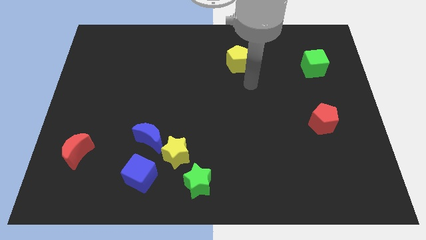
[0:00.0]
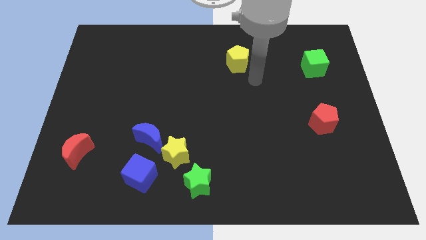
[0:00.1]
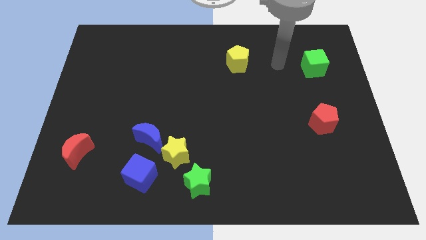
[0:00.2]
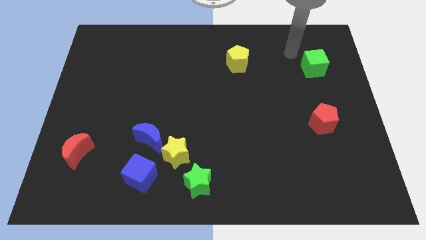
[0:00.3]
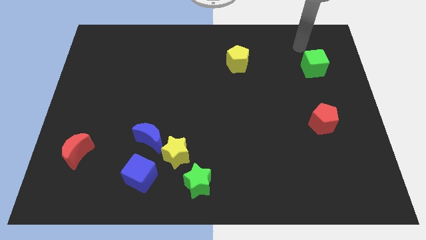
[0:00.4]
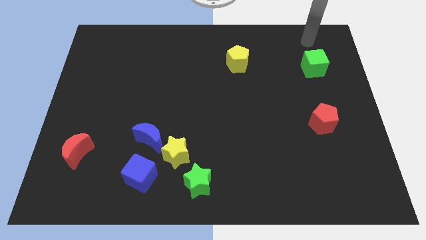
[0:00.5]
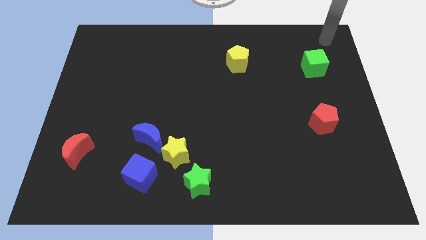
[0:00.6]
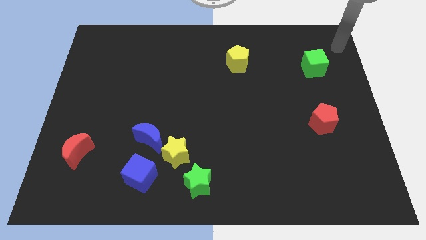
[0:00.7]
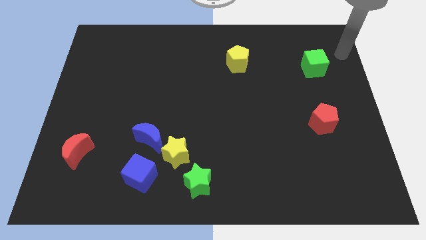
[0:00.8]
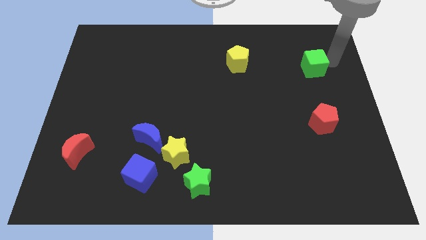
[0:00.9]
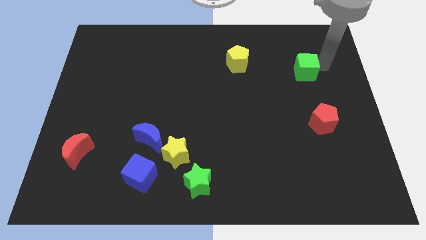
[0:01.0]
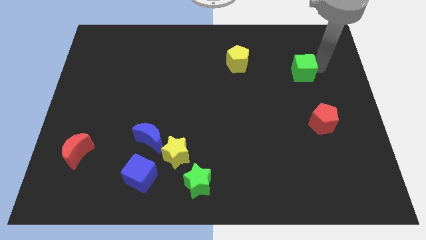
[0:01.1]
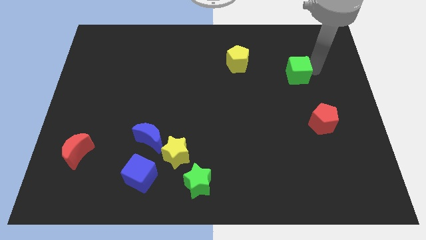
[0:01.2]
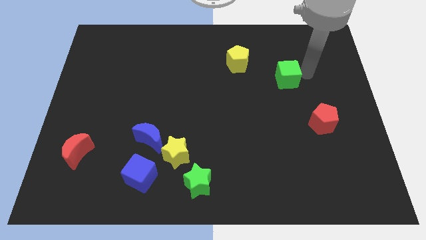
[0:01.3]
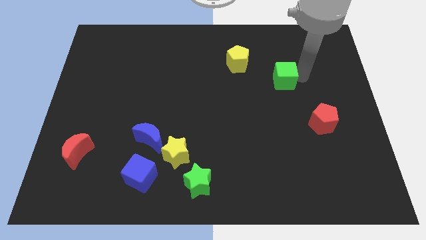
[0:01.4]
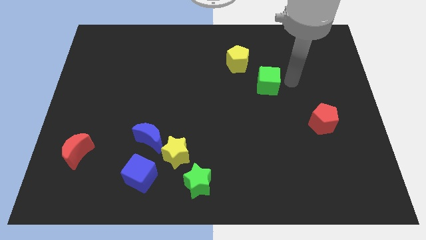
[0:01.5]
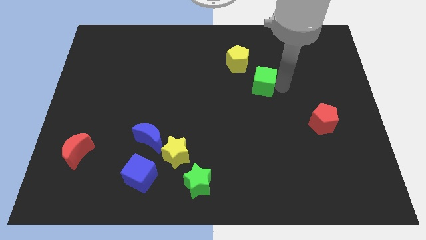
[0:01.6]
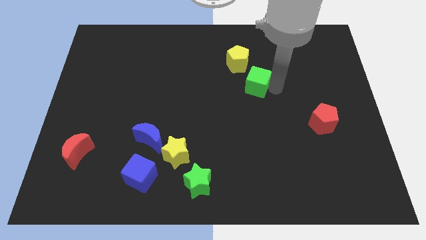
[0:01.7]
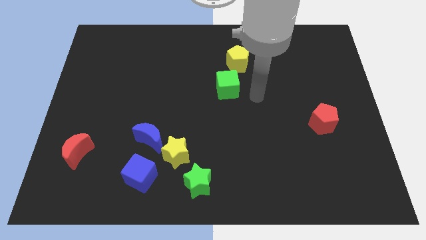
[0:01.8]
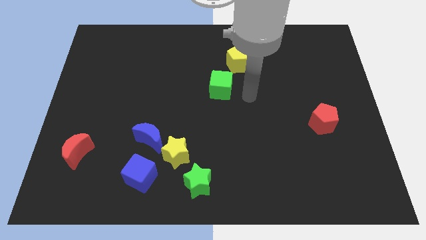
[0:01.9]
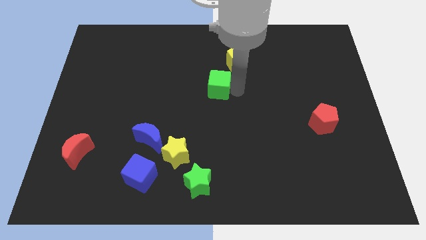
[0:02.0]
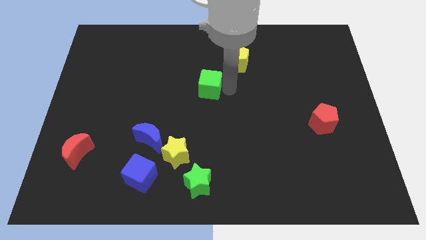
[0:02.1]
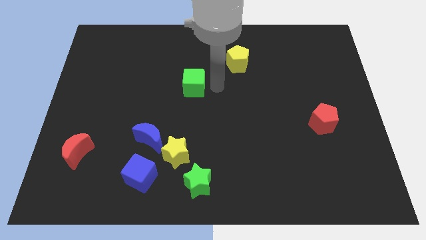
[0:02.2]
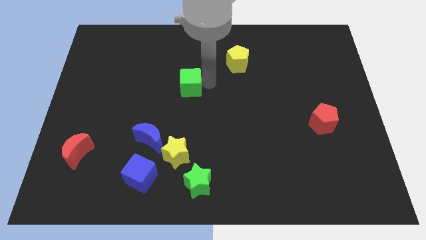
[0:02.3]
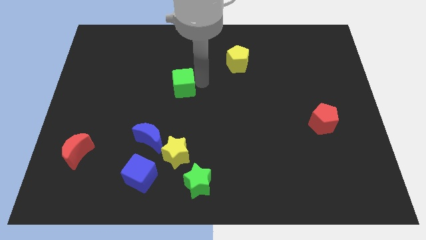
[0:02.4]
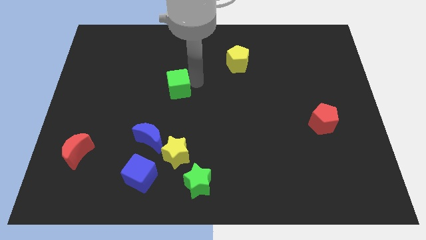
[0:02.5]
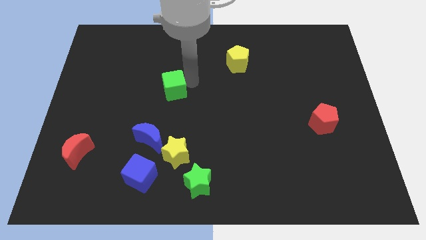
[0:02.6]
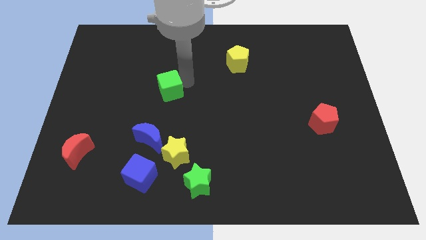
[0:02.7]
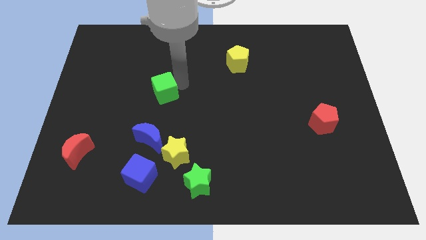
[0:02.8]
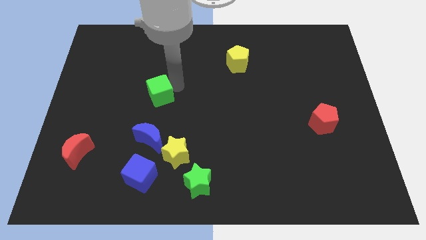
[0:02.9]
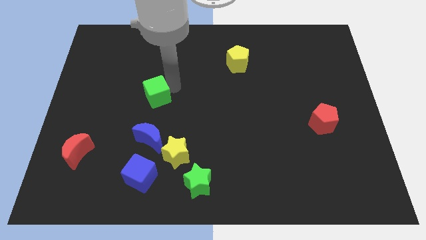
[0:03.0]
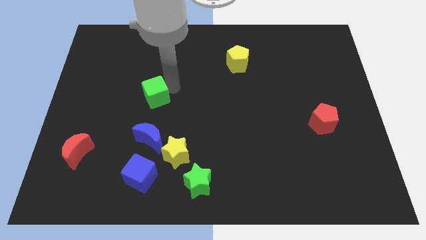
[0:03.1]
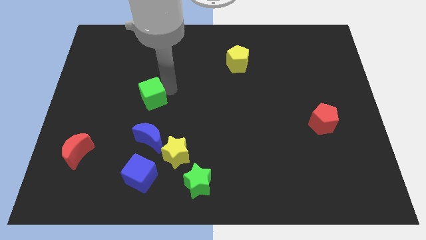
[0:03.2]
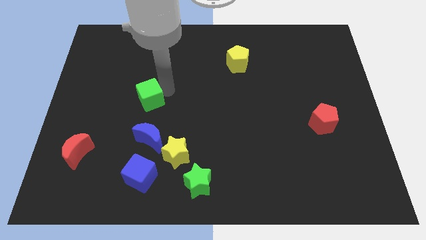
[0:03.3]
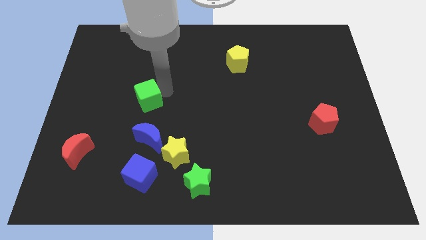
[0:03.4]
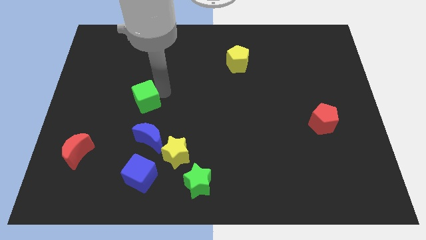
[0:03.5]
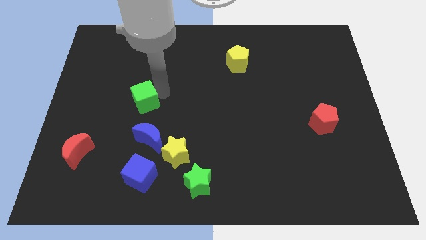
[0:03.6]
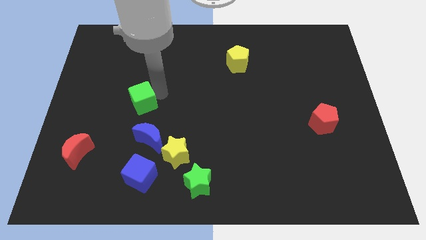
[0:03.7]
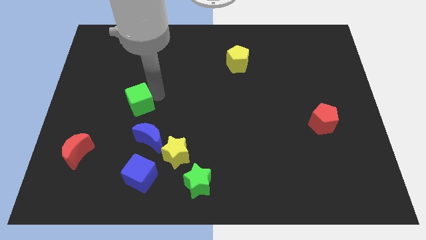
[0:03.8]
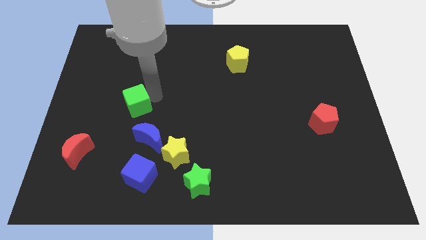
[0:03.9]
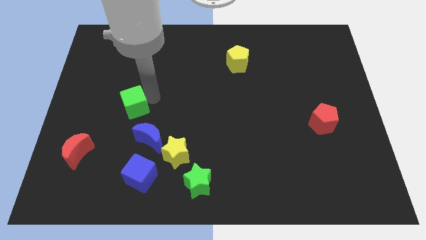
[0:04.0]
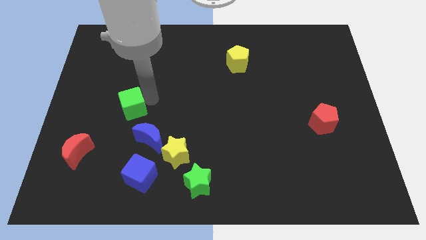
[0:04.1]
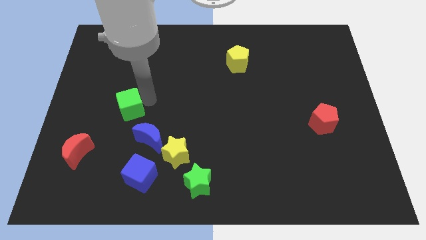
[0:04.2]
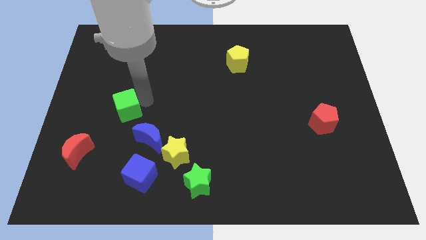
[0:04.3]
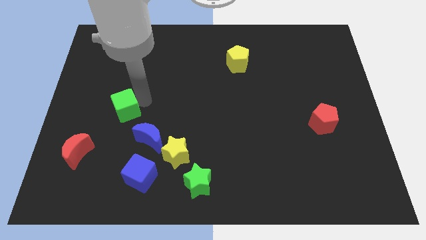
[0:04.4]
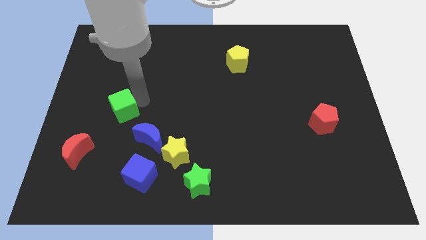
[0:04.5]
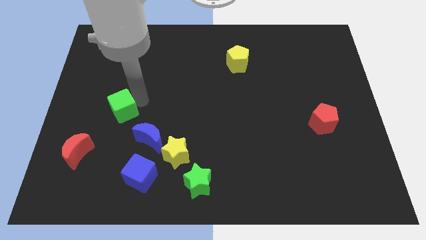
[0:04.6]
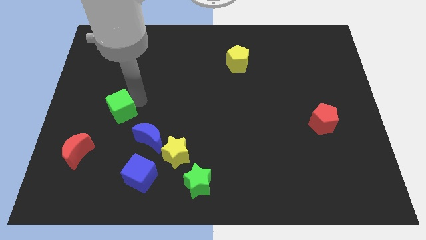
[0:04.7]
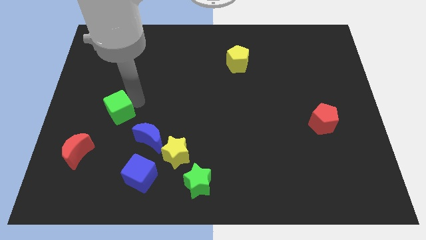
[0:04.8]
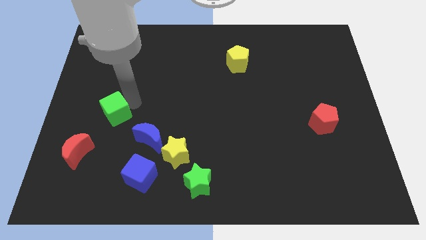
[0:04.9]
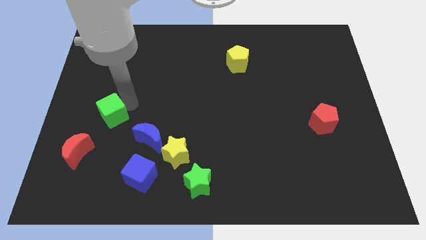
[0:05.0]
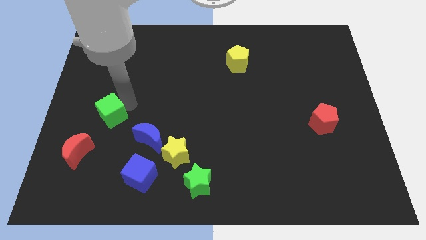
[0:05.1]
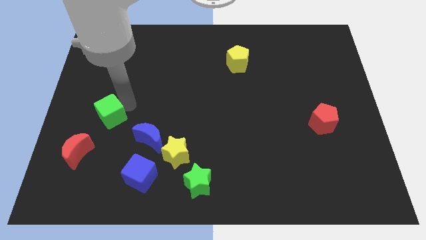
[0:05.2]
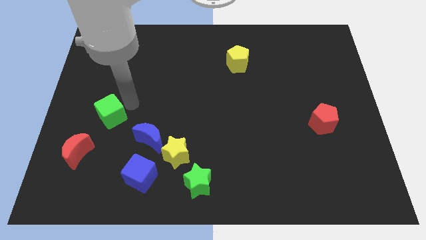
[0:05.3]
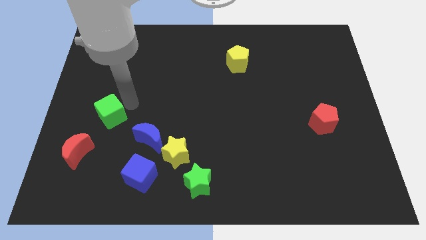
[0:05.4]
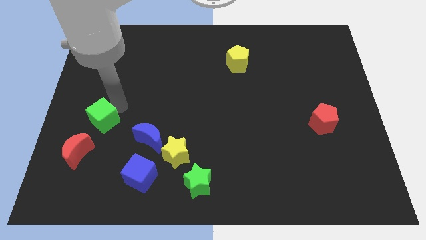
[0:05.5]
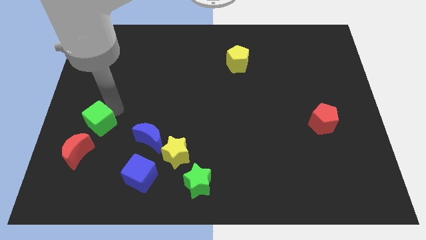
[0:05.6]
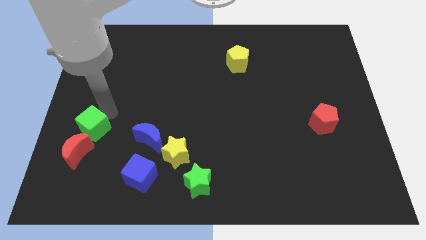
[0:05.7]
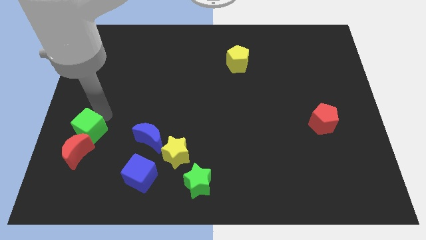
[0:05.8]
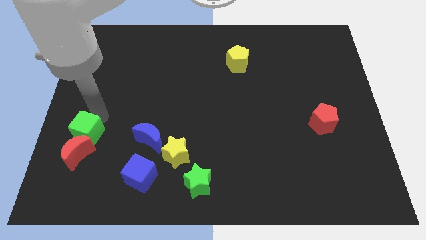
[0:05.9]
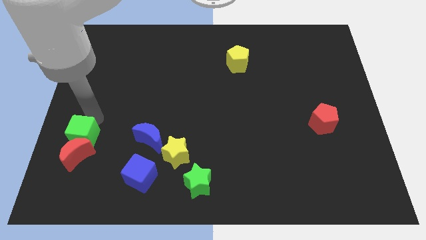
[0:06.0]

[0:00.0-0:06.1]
slide the green cube close to the red moon

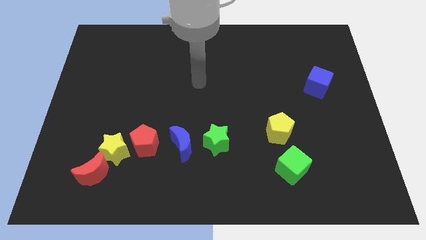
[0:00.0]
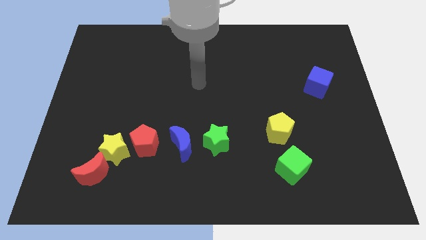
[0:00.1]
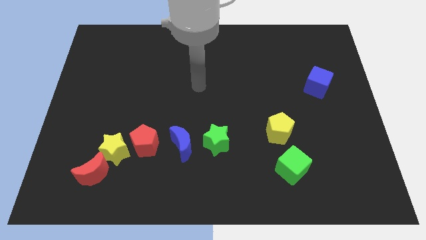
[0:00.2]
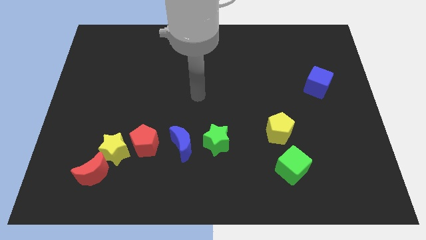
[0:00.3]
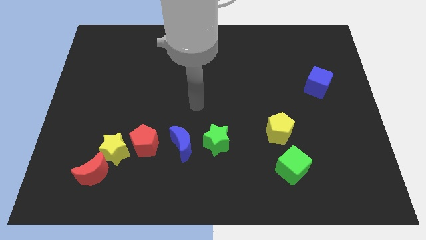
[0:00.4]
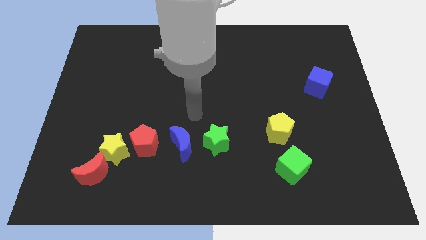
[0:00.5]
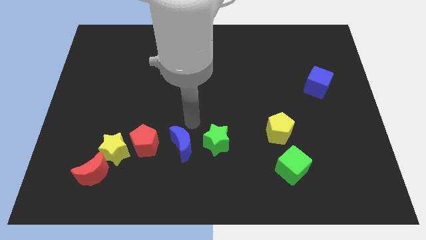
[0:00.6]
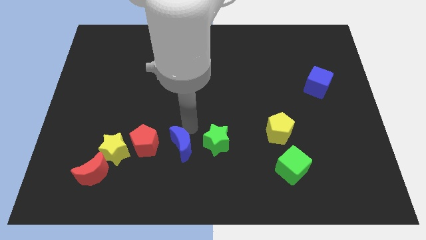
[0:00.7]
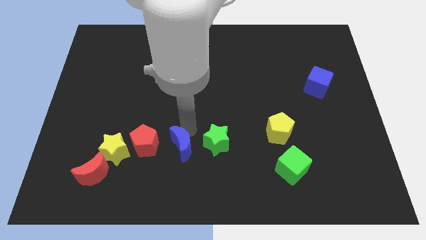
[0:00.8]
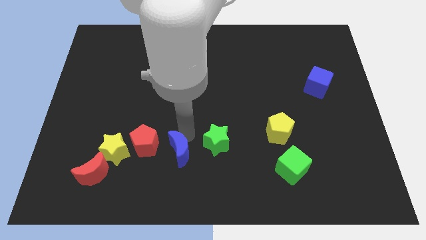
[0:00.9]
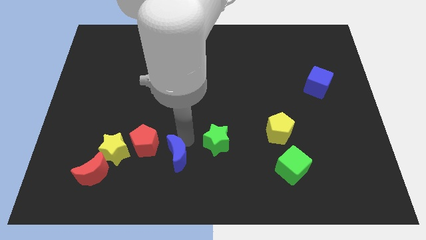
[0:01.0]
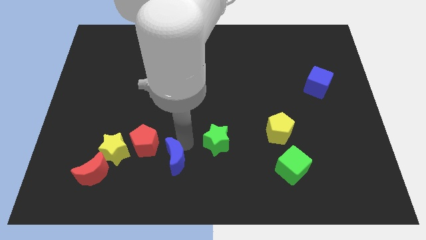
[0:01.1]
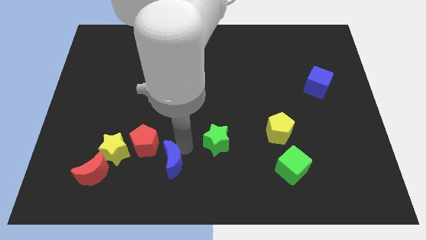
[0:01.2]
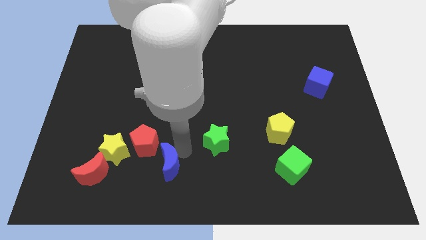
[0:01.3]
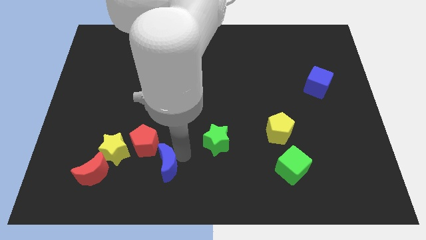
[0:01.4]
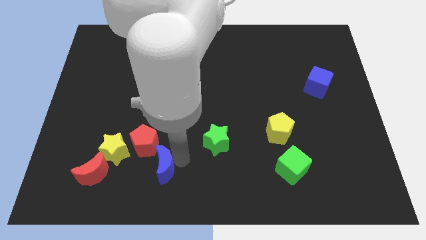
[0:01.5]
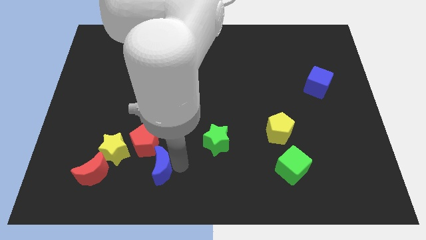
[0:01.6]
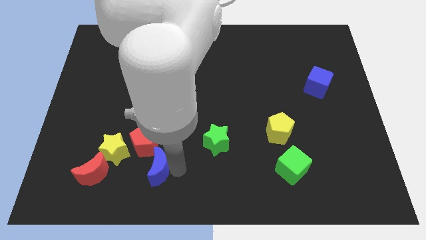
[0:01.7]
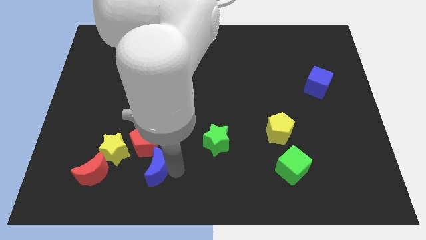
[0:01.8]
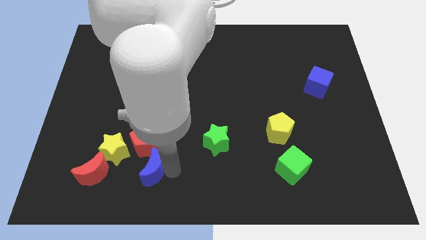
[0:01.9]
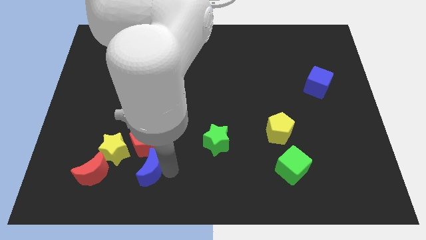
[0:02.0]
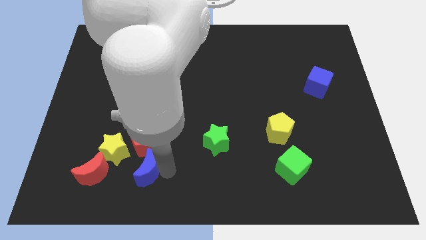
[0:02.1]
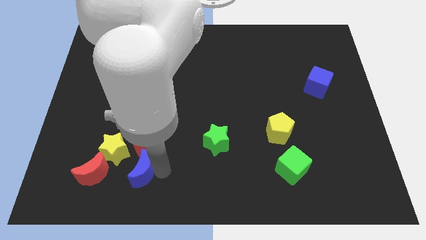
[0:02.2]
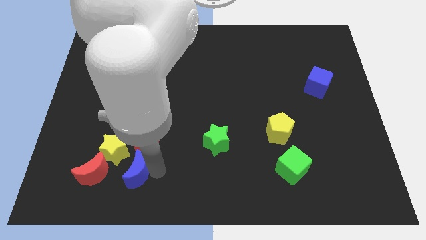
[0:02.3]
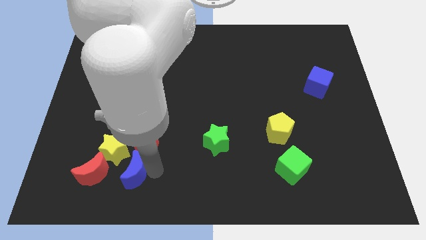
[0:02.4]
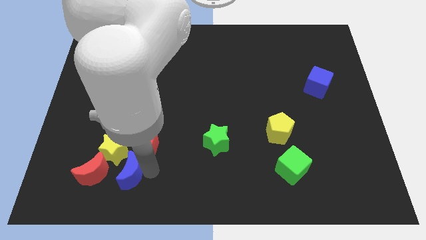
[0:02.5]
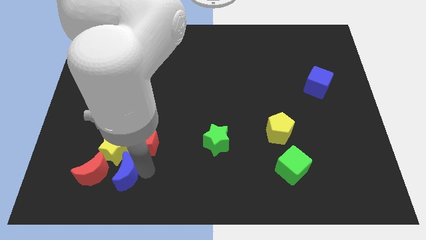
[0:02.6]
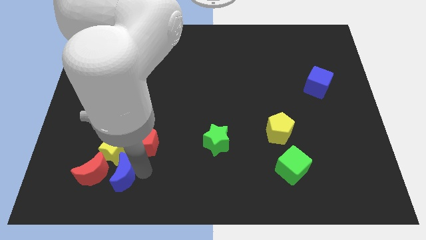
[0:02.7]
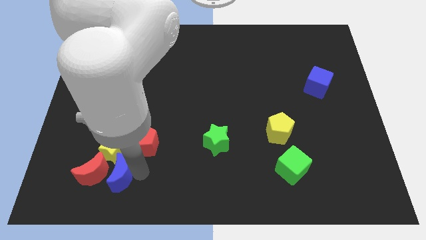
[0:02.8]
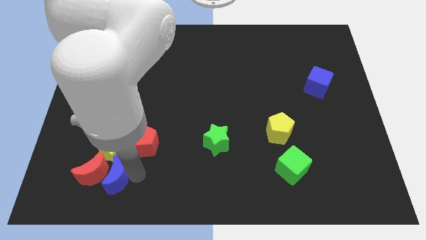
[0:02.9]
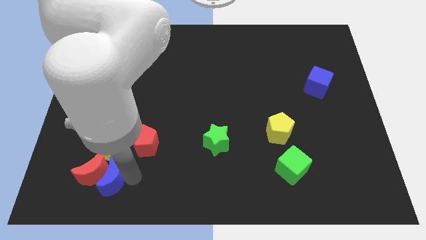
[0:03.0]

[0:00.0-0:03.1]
slide the blue moon close to the red moon
